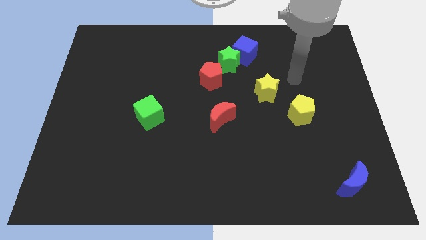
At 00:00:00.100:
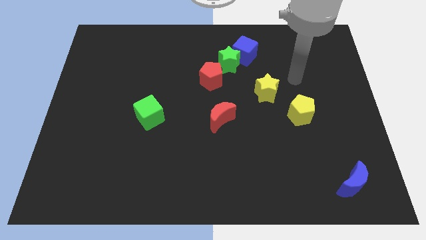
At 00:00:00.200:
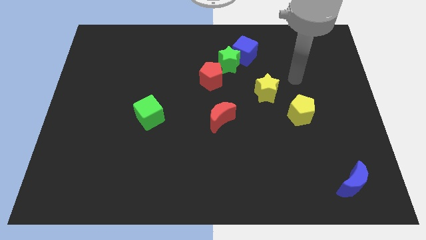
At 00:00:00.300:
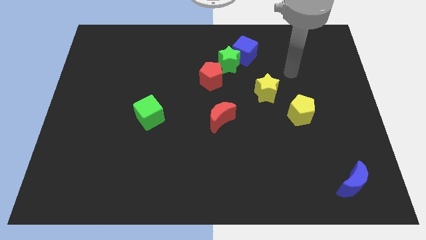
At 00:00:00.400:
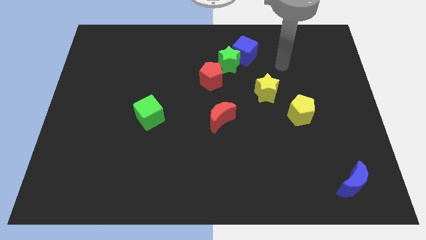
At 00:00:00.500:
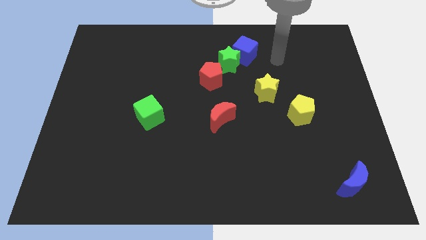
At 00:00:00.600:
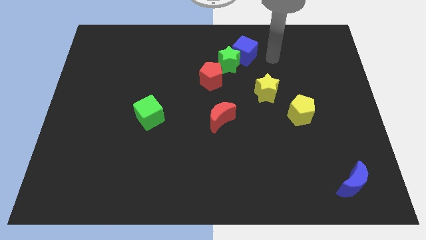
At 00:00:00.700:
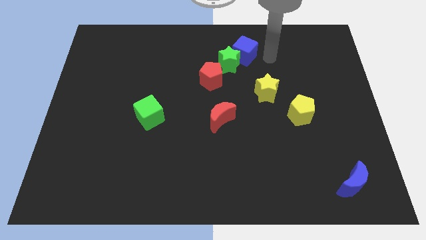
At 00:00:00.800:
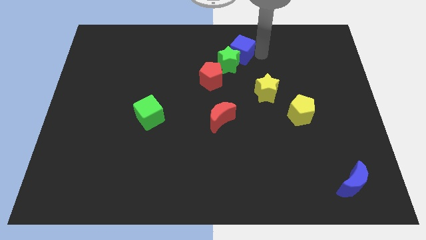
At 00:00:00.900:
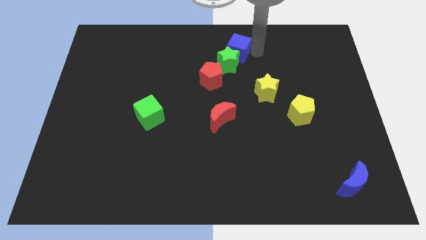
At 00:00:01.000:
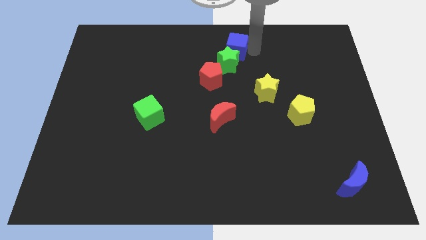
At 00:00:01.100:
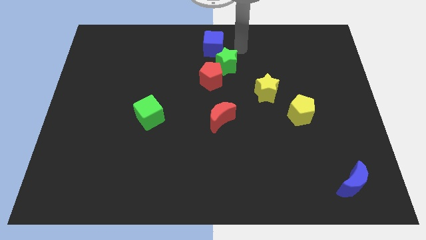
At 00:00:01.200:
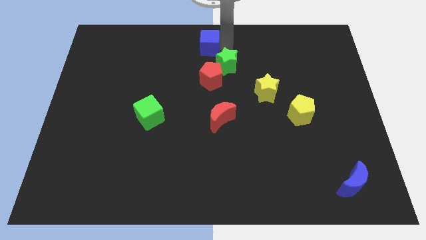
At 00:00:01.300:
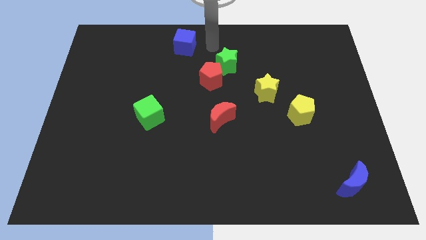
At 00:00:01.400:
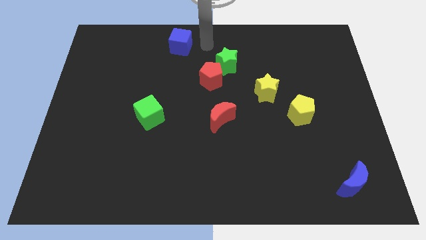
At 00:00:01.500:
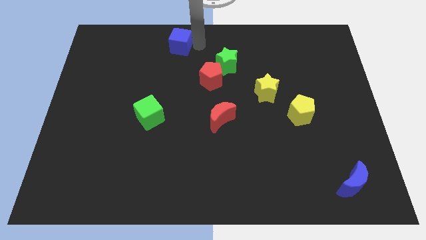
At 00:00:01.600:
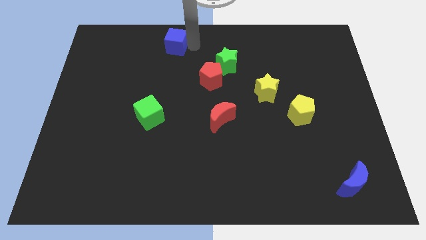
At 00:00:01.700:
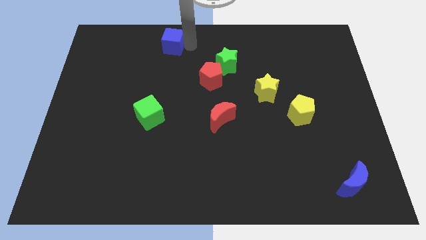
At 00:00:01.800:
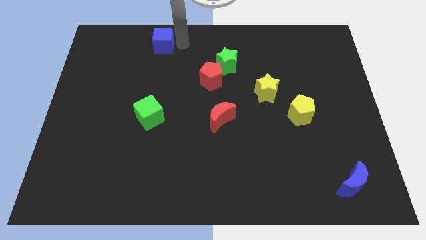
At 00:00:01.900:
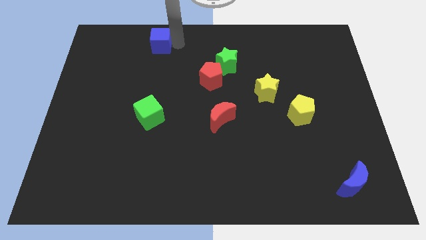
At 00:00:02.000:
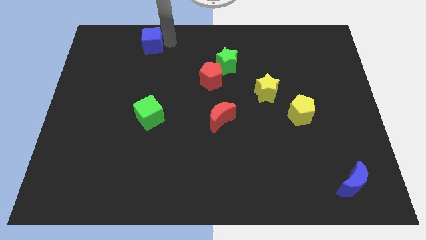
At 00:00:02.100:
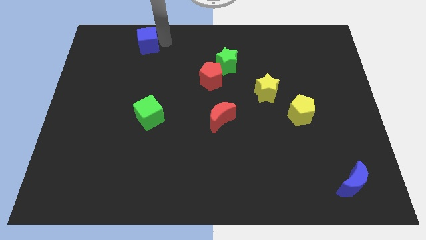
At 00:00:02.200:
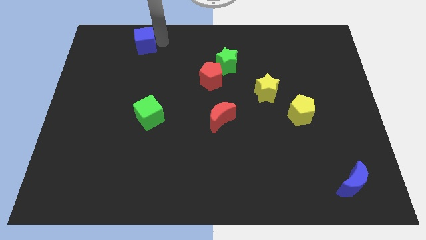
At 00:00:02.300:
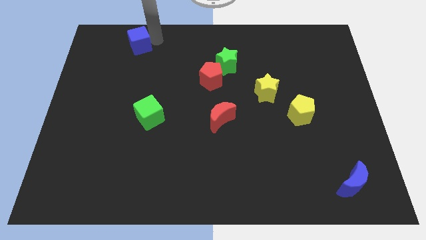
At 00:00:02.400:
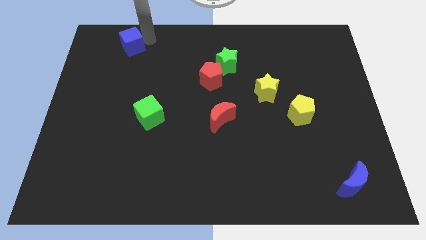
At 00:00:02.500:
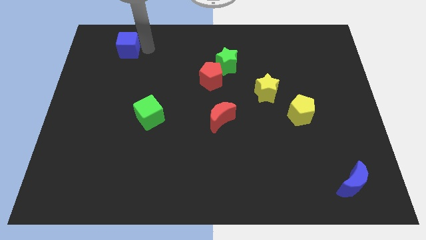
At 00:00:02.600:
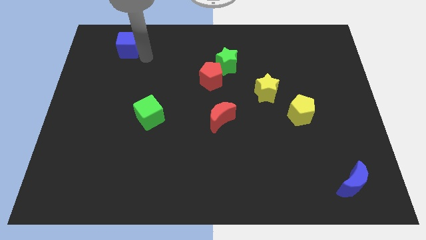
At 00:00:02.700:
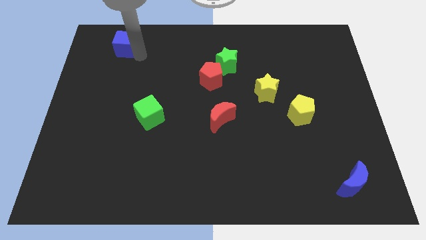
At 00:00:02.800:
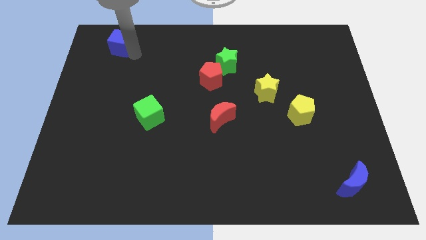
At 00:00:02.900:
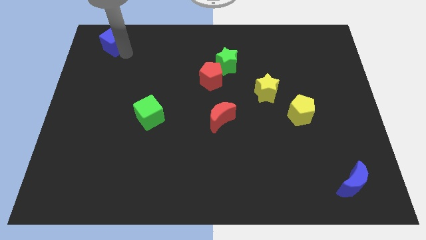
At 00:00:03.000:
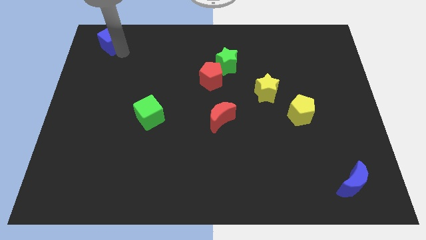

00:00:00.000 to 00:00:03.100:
move the blue cube towards the top left corner of the board

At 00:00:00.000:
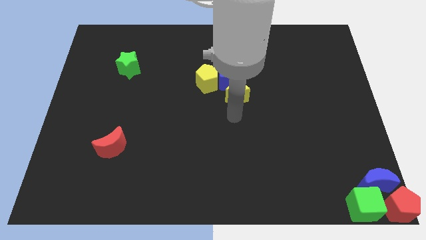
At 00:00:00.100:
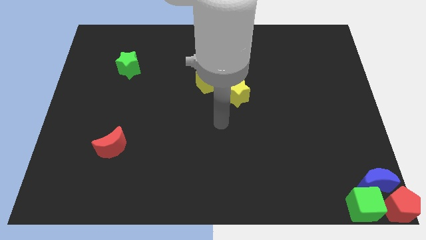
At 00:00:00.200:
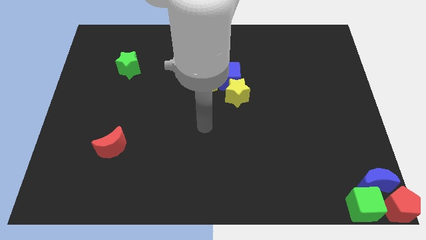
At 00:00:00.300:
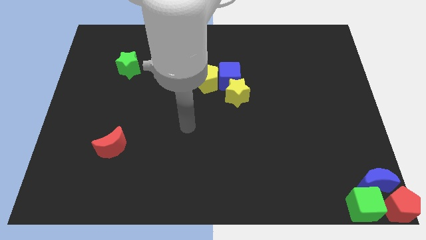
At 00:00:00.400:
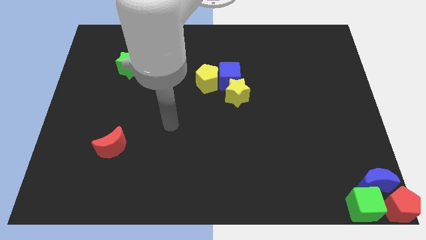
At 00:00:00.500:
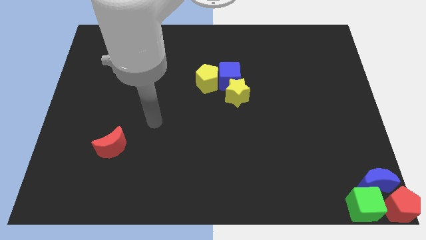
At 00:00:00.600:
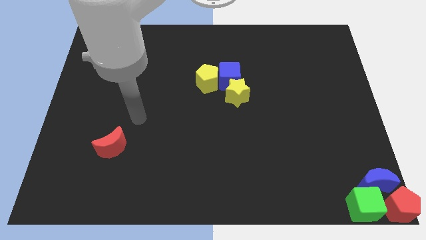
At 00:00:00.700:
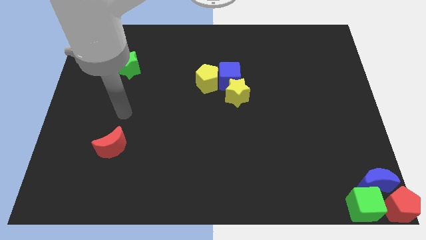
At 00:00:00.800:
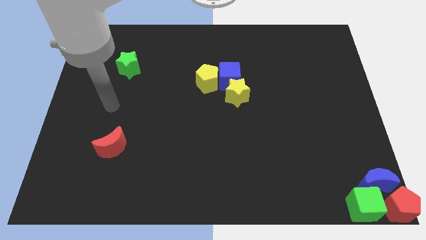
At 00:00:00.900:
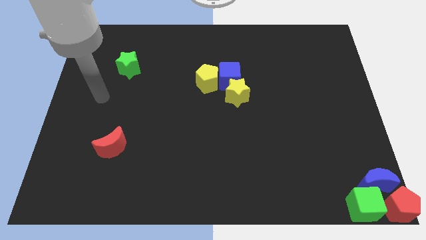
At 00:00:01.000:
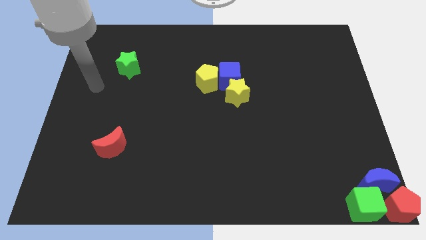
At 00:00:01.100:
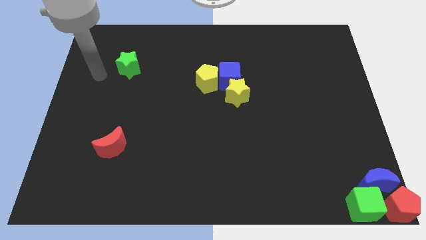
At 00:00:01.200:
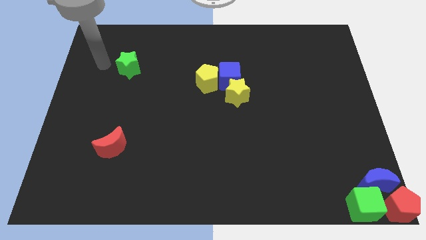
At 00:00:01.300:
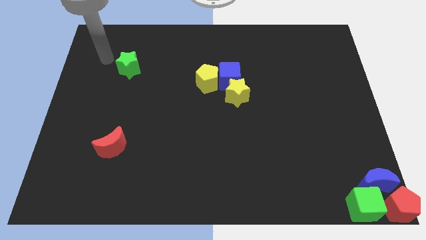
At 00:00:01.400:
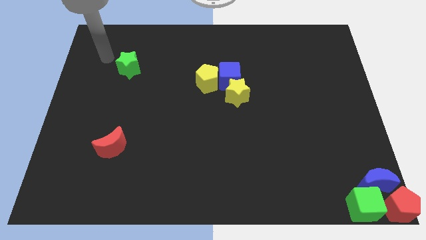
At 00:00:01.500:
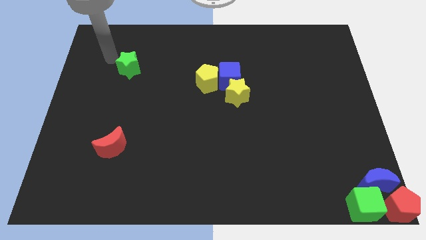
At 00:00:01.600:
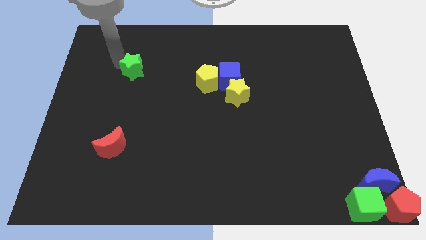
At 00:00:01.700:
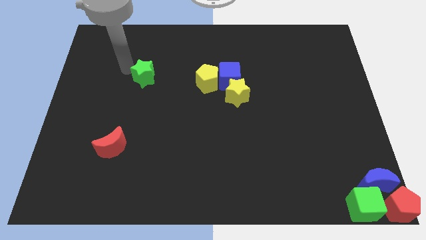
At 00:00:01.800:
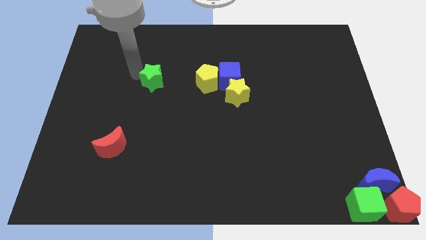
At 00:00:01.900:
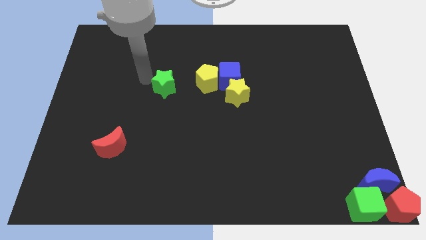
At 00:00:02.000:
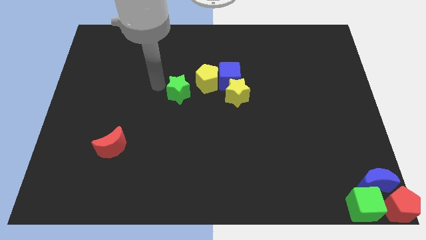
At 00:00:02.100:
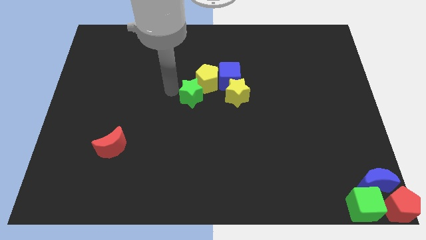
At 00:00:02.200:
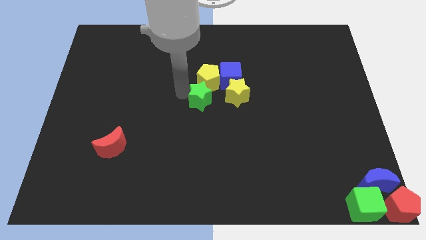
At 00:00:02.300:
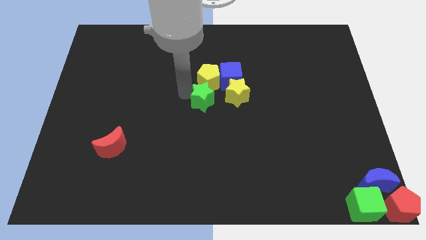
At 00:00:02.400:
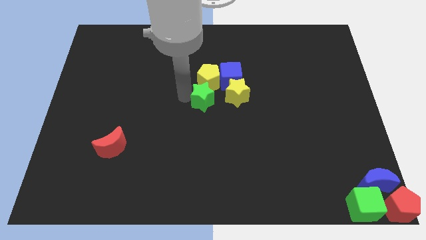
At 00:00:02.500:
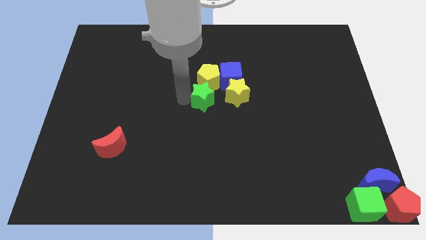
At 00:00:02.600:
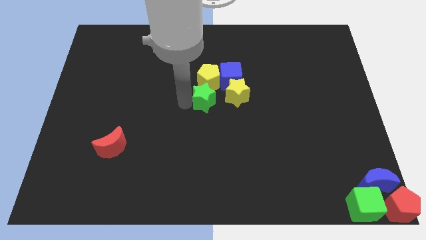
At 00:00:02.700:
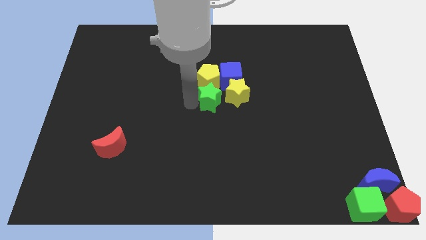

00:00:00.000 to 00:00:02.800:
place the green star at the bottom of the yellow pentagon

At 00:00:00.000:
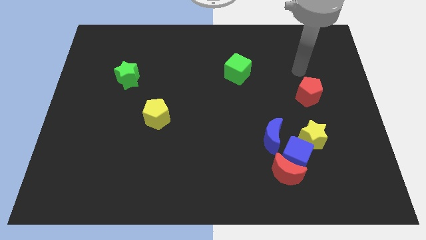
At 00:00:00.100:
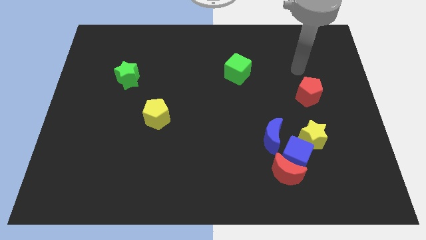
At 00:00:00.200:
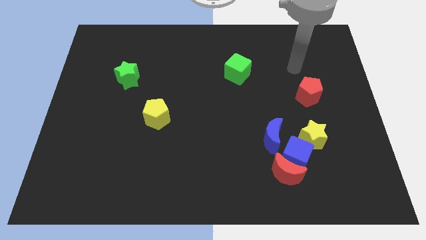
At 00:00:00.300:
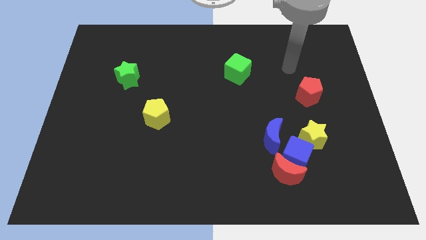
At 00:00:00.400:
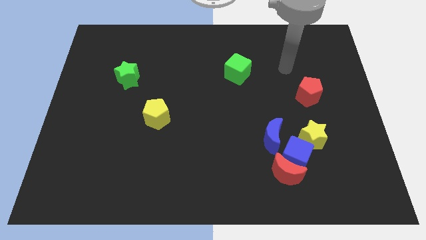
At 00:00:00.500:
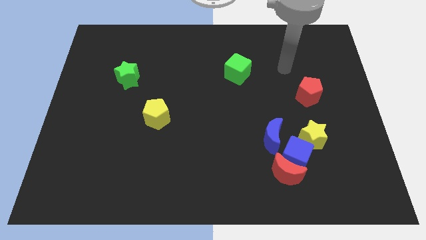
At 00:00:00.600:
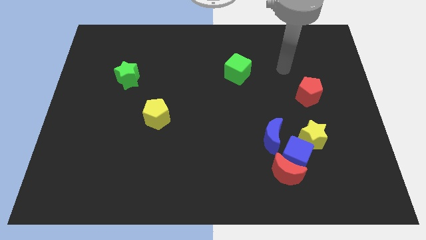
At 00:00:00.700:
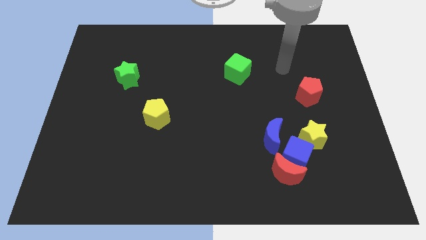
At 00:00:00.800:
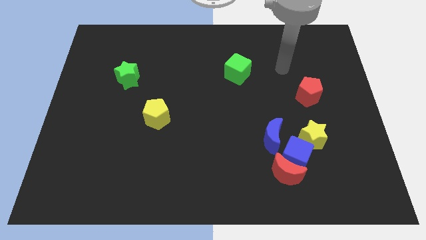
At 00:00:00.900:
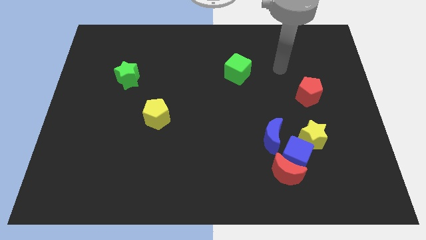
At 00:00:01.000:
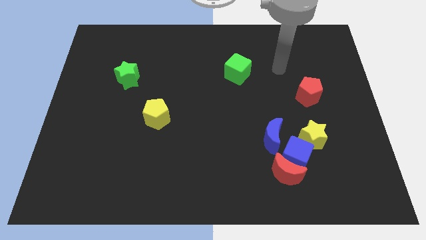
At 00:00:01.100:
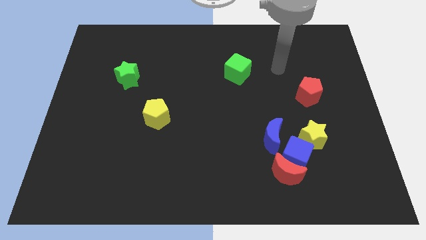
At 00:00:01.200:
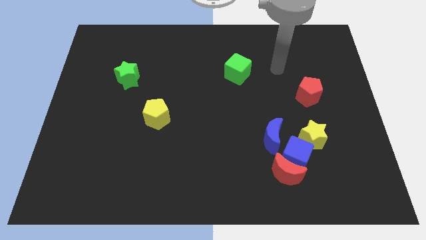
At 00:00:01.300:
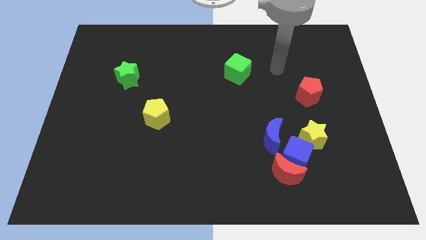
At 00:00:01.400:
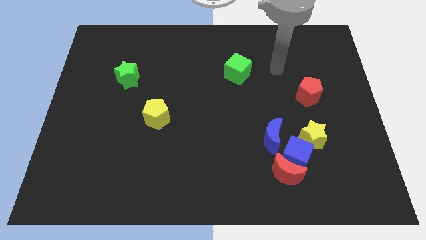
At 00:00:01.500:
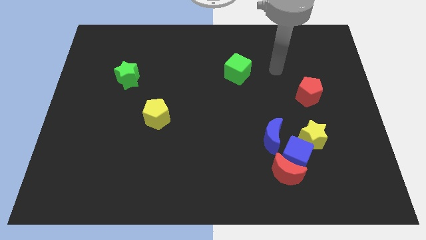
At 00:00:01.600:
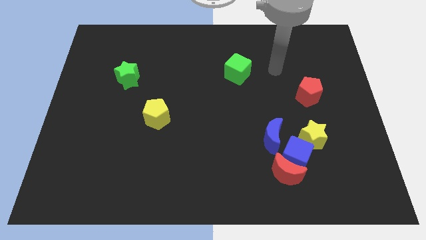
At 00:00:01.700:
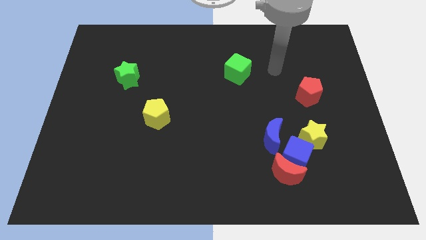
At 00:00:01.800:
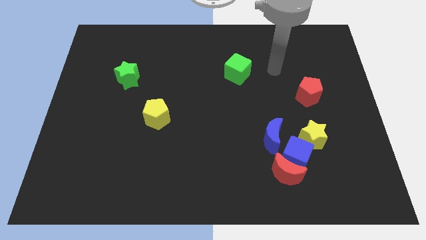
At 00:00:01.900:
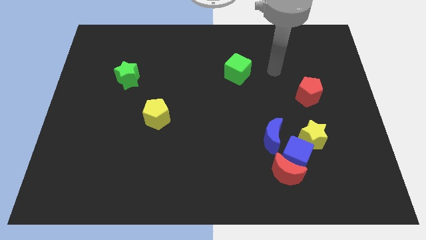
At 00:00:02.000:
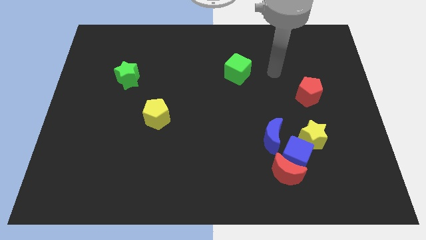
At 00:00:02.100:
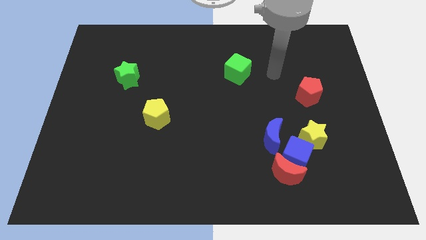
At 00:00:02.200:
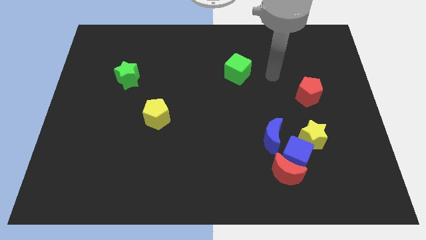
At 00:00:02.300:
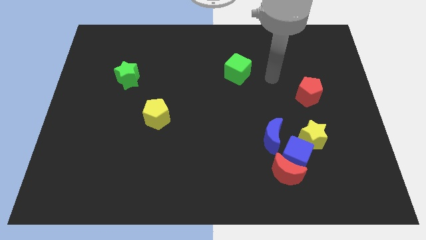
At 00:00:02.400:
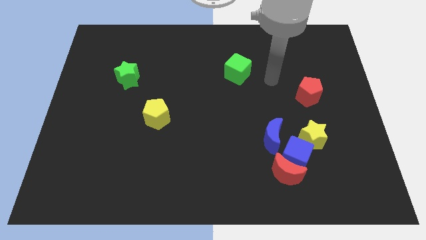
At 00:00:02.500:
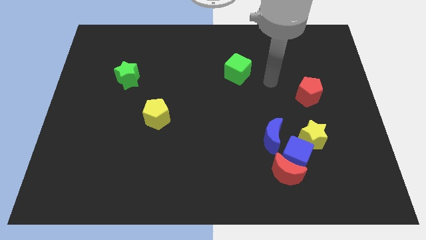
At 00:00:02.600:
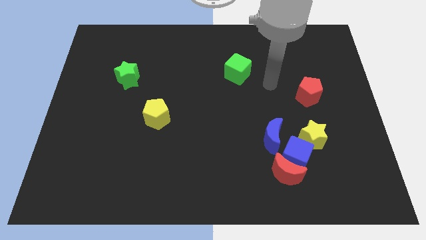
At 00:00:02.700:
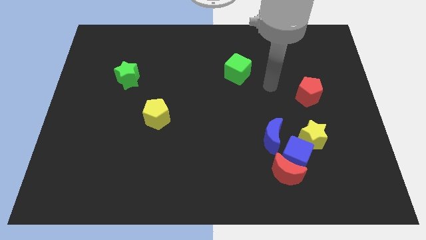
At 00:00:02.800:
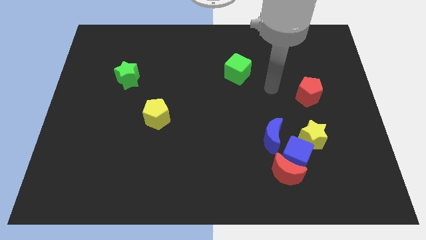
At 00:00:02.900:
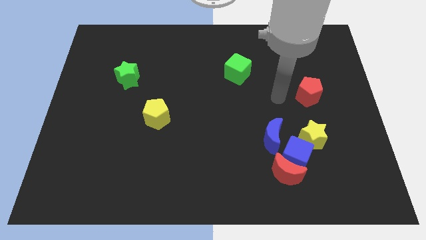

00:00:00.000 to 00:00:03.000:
move your arm to the left side of the red pentagon
